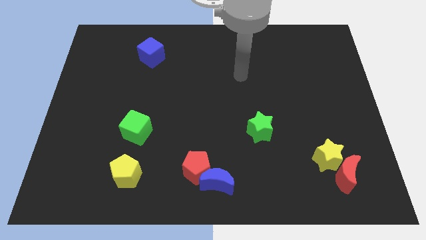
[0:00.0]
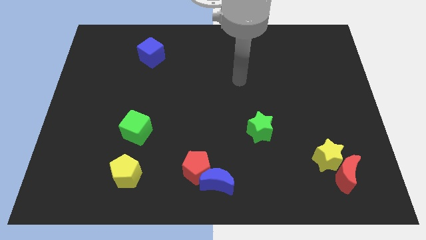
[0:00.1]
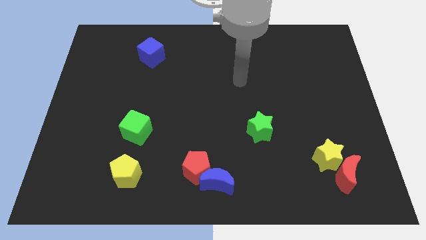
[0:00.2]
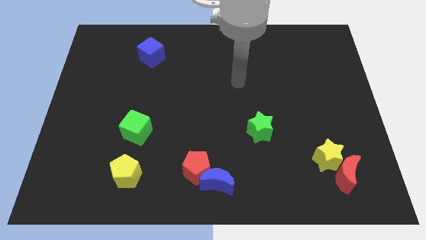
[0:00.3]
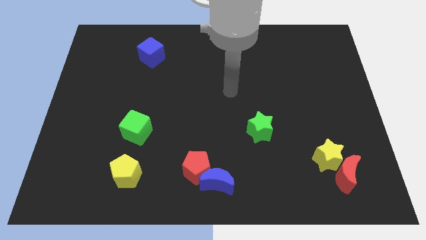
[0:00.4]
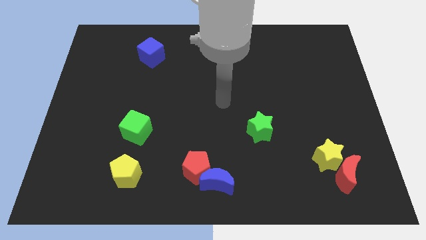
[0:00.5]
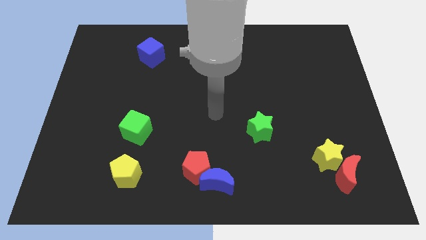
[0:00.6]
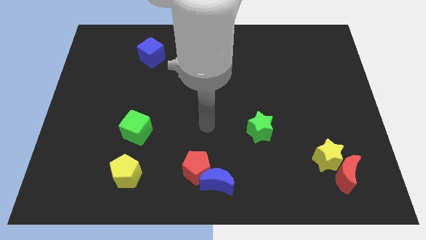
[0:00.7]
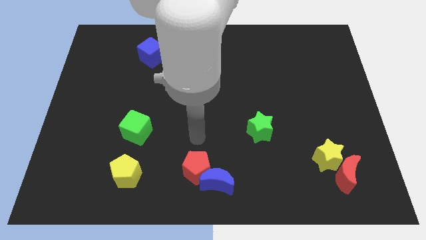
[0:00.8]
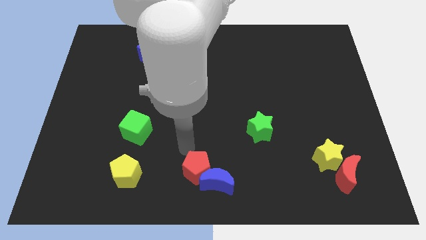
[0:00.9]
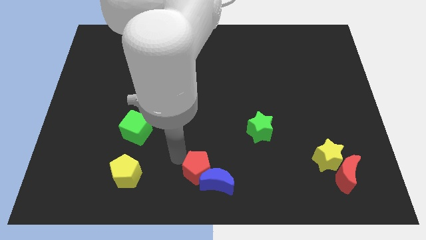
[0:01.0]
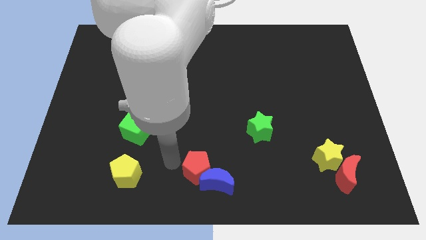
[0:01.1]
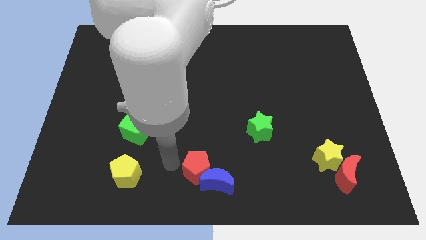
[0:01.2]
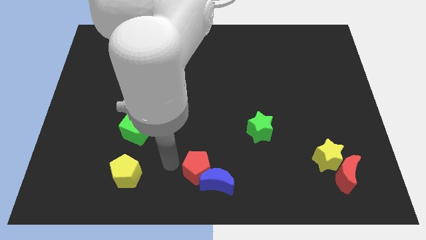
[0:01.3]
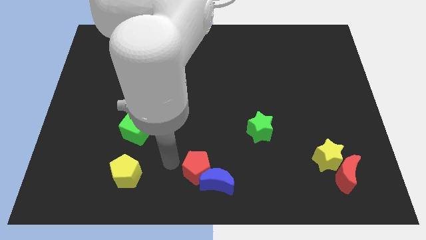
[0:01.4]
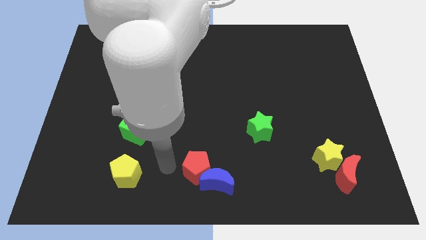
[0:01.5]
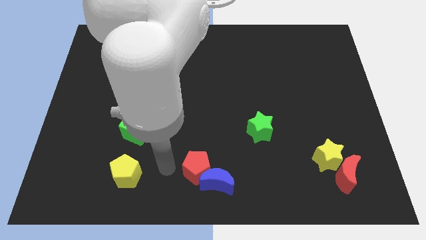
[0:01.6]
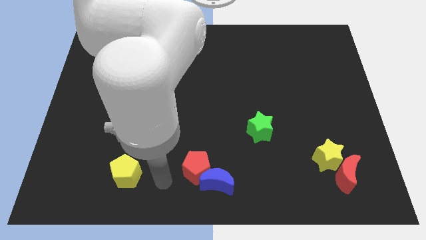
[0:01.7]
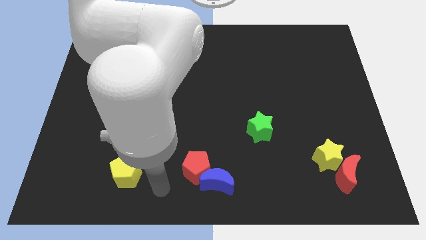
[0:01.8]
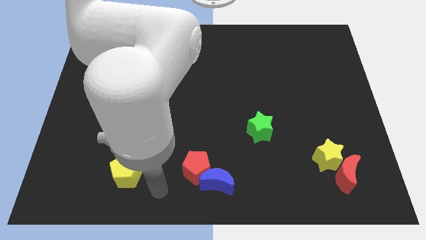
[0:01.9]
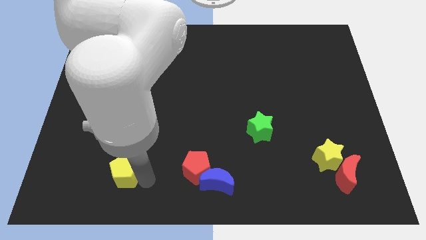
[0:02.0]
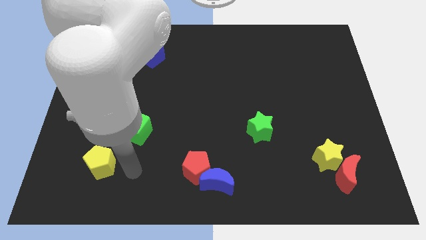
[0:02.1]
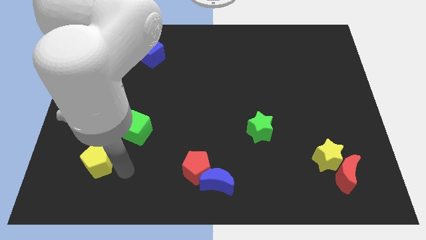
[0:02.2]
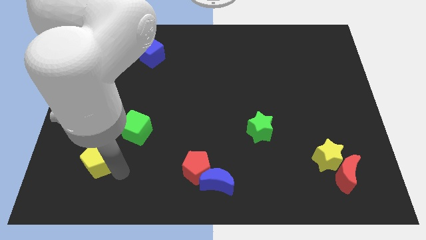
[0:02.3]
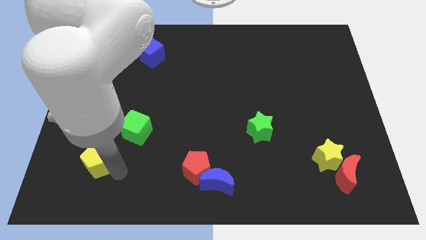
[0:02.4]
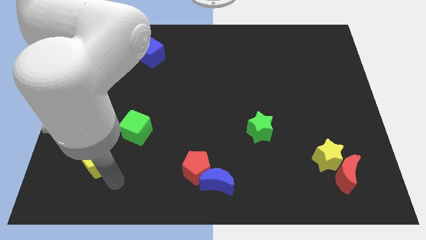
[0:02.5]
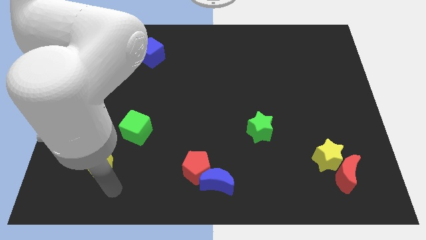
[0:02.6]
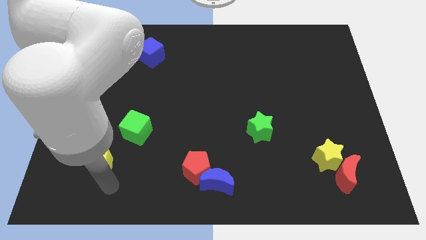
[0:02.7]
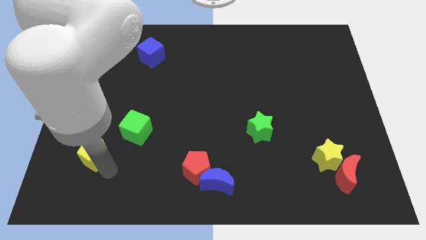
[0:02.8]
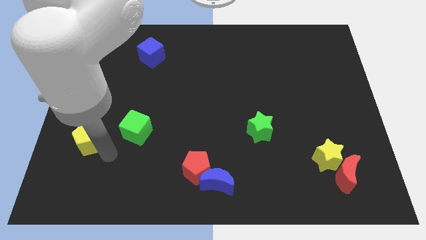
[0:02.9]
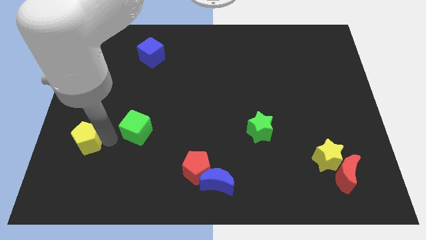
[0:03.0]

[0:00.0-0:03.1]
move yellow pentagon to left of green cube

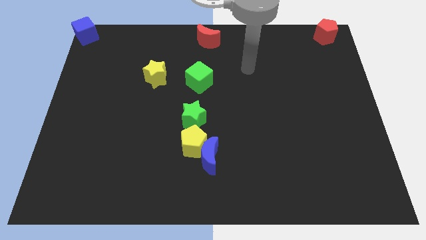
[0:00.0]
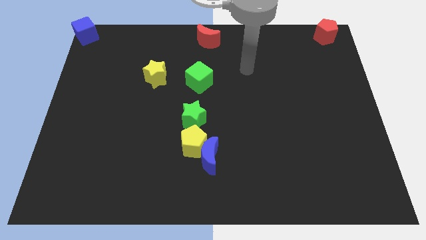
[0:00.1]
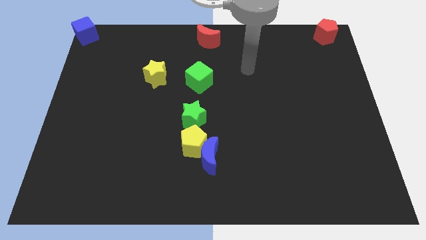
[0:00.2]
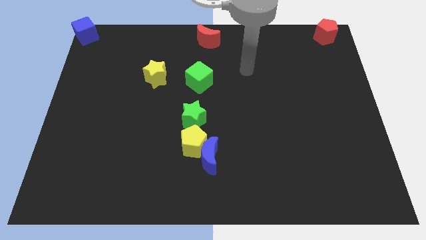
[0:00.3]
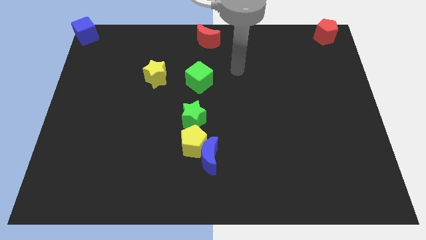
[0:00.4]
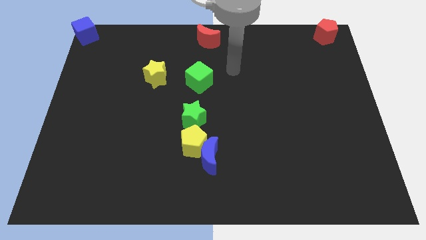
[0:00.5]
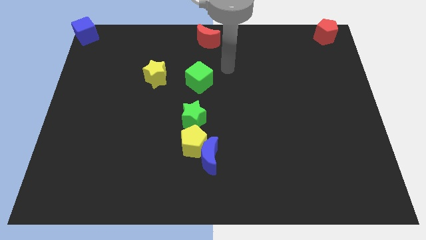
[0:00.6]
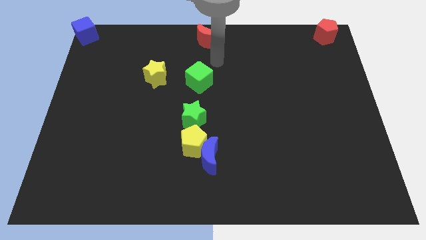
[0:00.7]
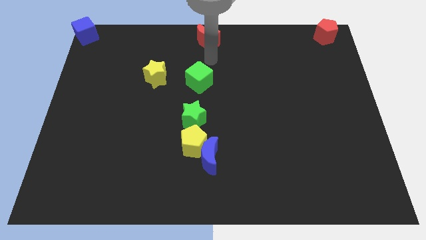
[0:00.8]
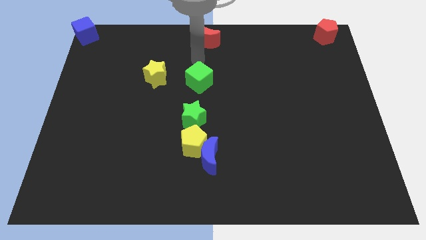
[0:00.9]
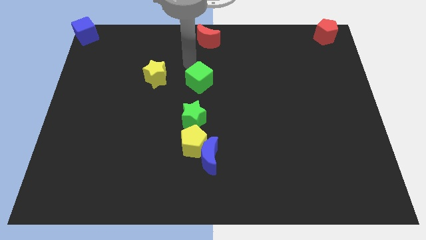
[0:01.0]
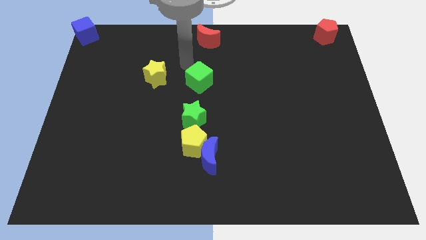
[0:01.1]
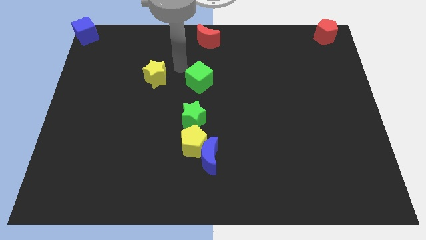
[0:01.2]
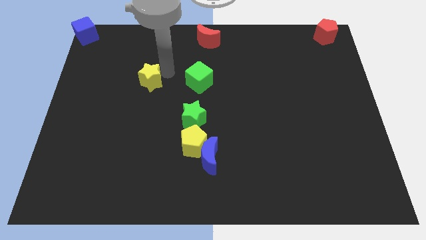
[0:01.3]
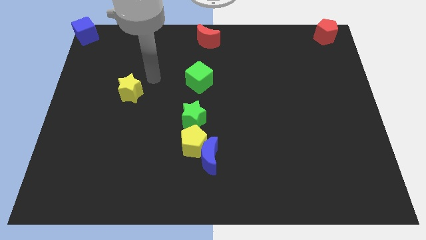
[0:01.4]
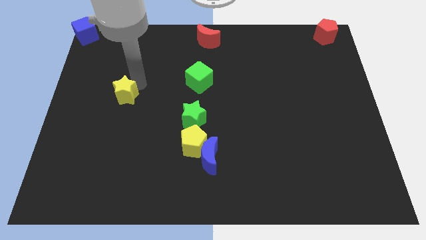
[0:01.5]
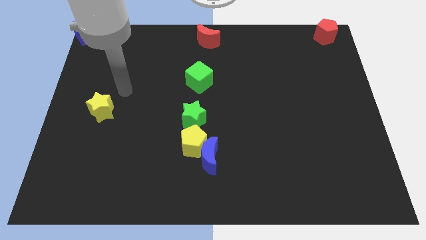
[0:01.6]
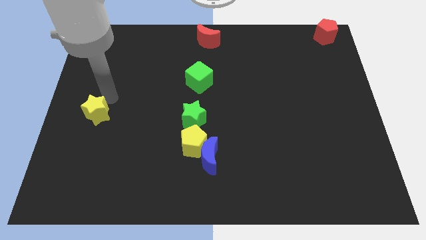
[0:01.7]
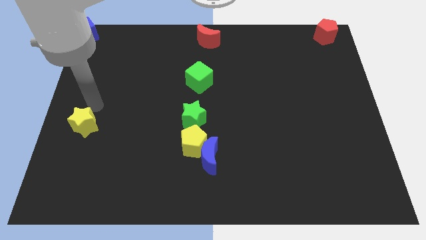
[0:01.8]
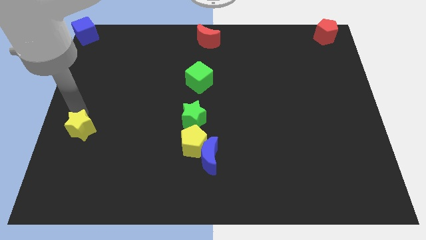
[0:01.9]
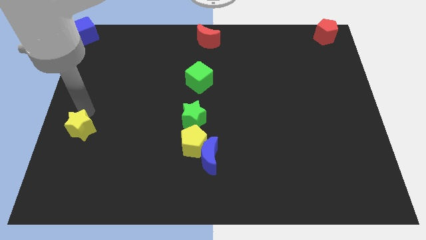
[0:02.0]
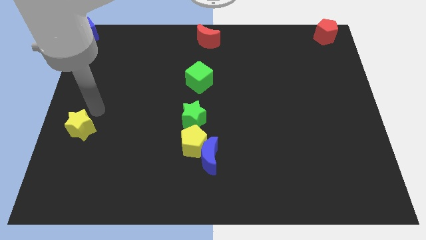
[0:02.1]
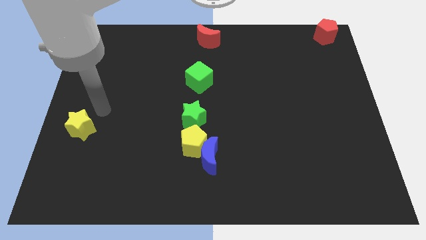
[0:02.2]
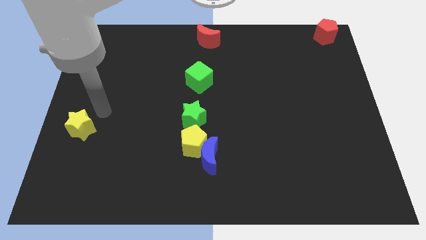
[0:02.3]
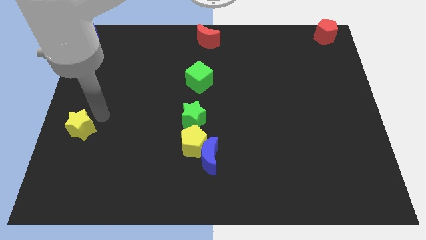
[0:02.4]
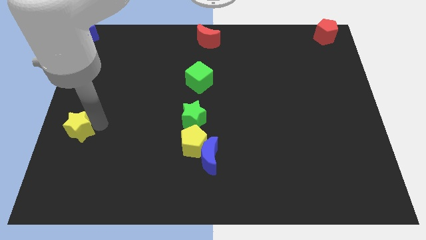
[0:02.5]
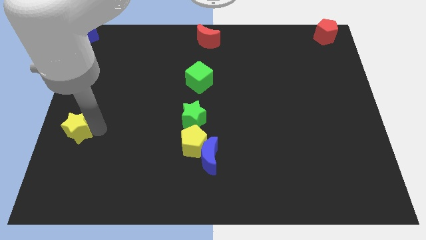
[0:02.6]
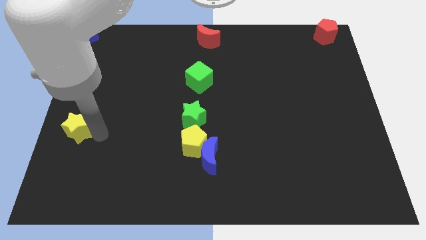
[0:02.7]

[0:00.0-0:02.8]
push the yellow star to the left side of the green star

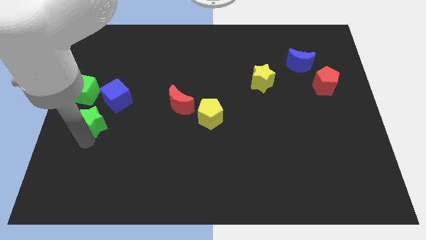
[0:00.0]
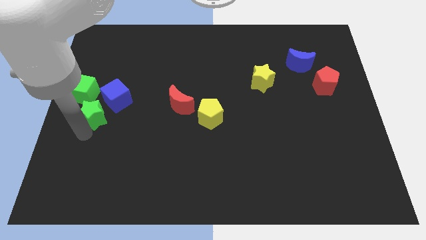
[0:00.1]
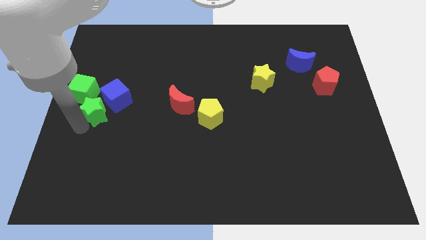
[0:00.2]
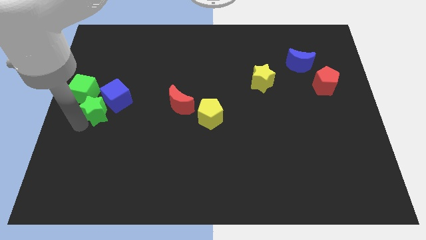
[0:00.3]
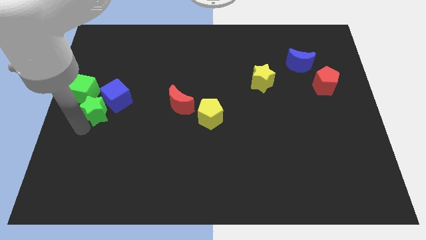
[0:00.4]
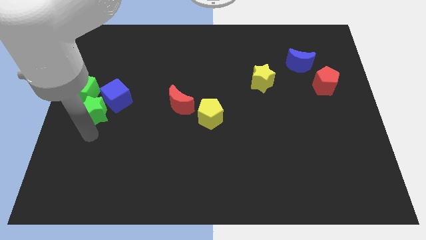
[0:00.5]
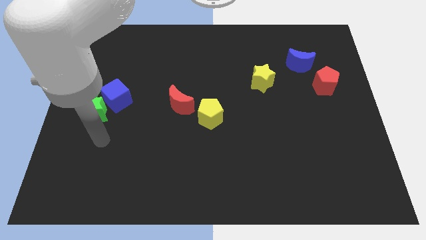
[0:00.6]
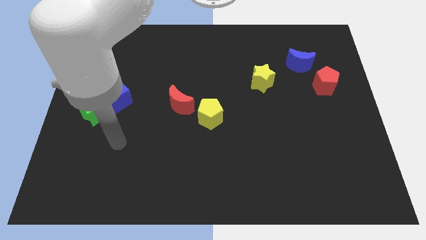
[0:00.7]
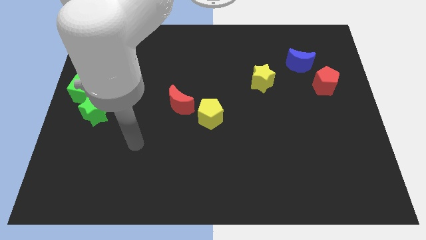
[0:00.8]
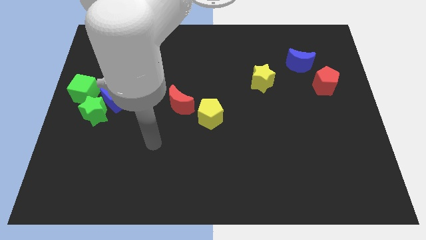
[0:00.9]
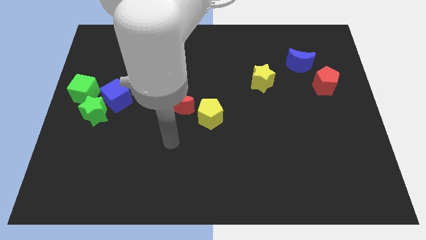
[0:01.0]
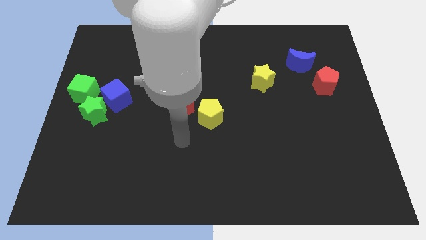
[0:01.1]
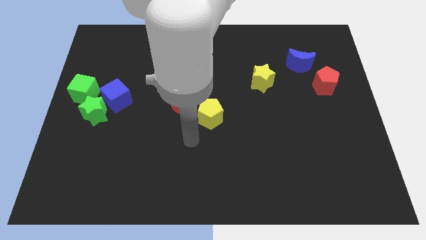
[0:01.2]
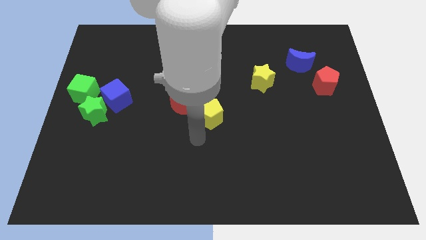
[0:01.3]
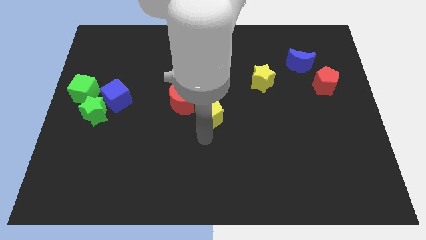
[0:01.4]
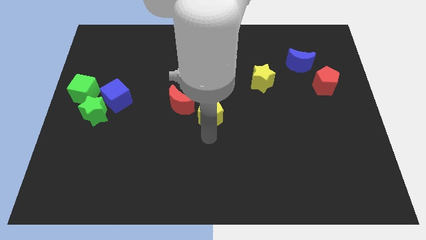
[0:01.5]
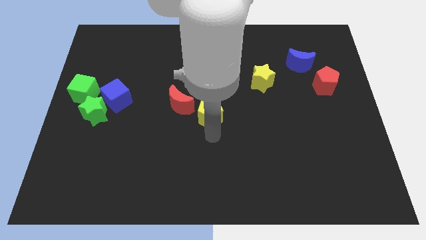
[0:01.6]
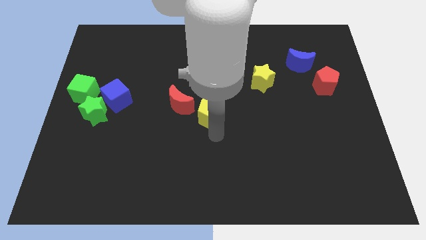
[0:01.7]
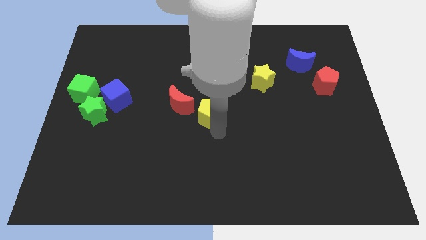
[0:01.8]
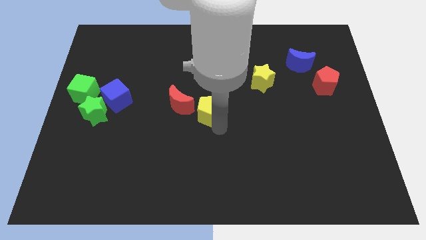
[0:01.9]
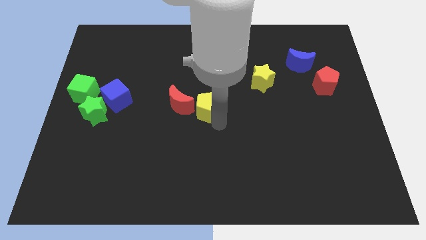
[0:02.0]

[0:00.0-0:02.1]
move the green star into the green cube

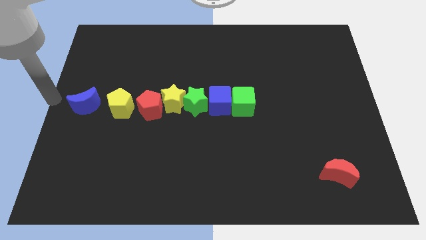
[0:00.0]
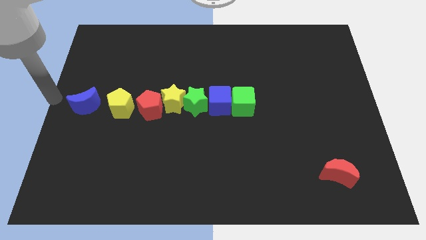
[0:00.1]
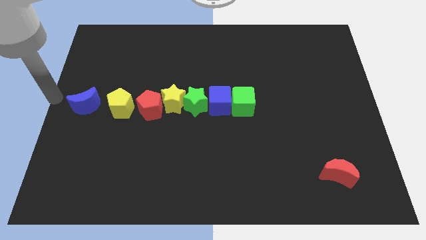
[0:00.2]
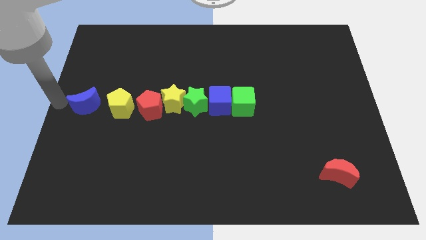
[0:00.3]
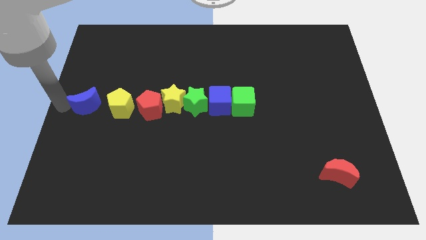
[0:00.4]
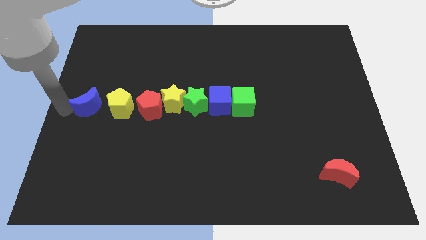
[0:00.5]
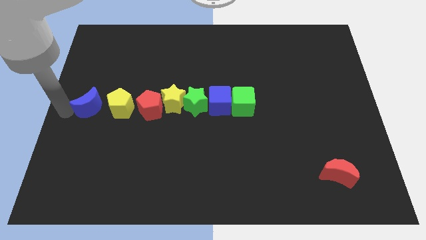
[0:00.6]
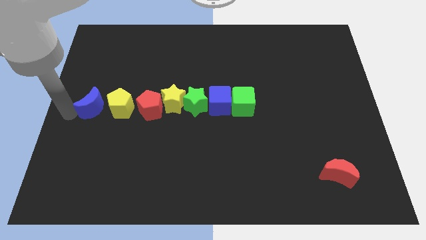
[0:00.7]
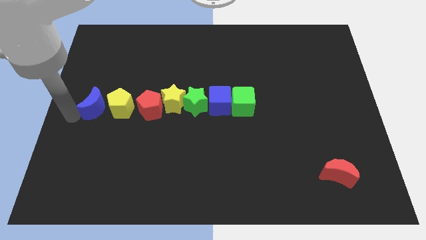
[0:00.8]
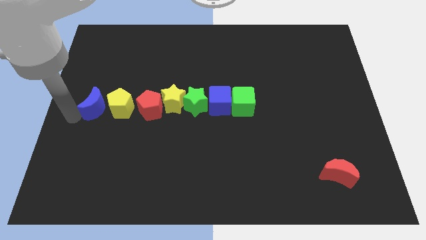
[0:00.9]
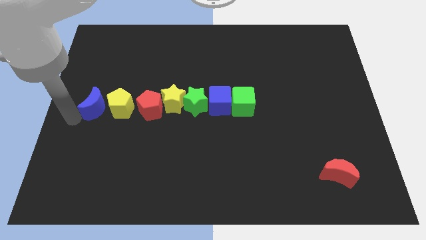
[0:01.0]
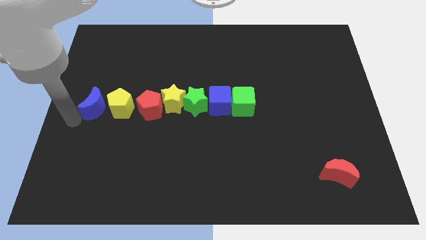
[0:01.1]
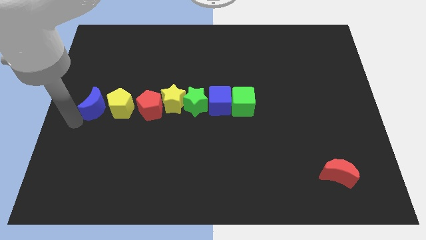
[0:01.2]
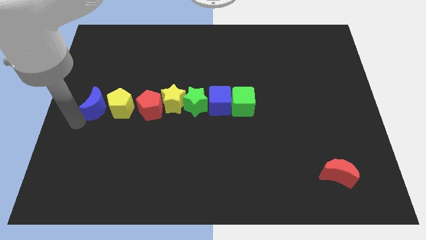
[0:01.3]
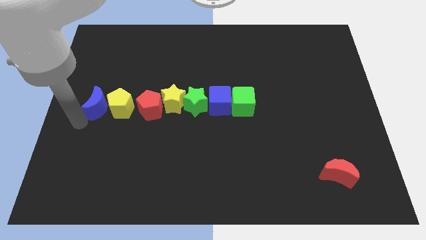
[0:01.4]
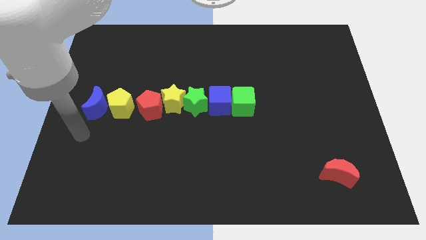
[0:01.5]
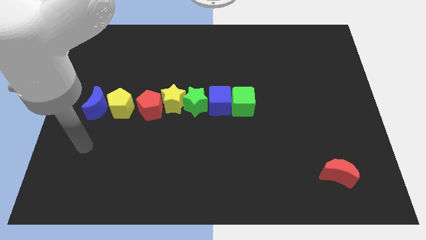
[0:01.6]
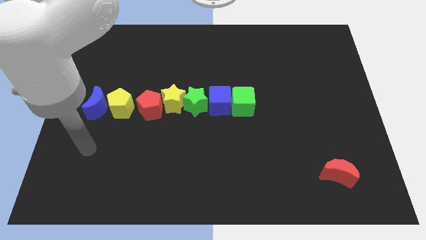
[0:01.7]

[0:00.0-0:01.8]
push the blue moon close to the yellow pentagon
